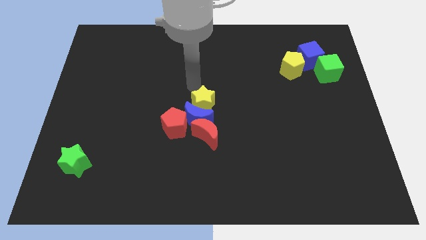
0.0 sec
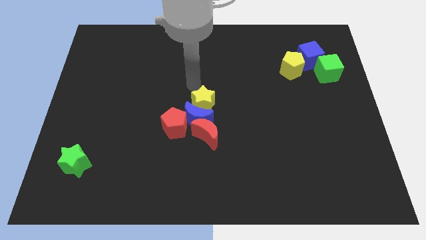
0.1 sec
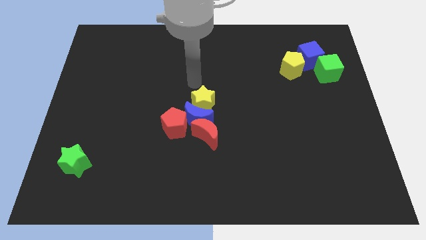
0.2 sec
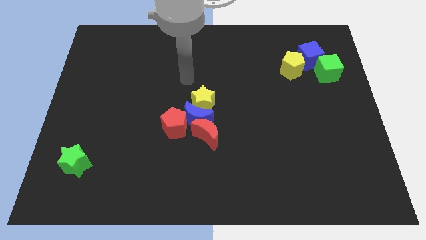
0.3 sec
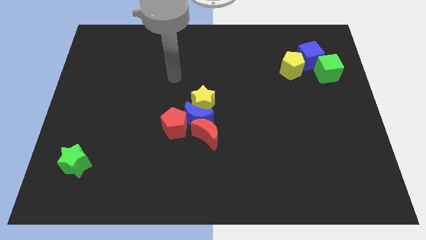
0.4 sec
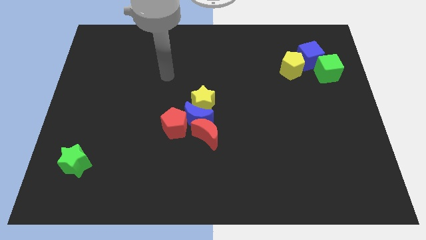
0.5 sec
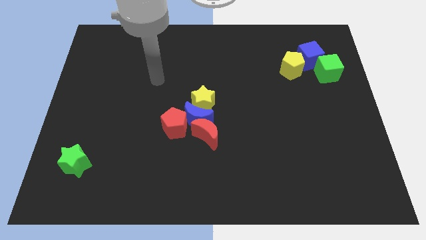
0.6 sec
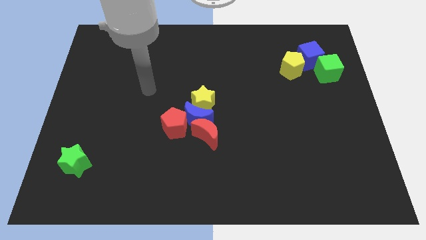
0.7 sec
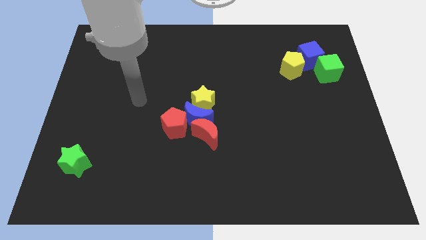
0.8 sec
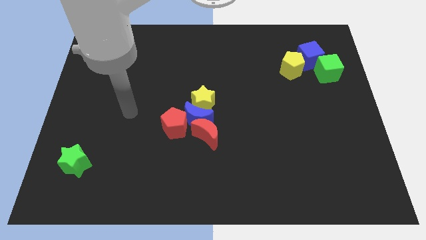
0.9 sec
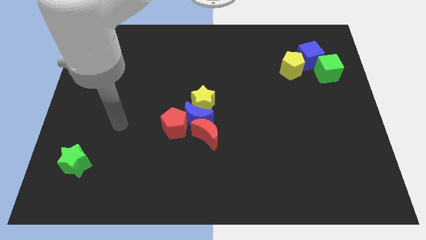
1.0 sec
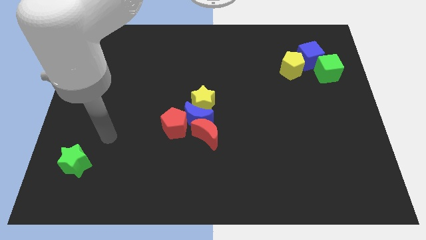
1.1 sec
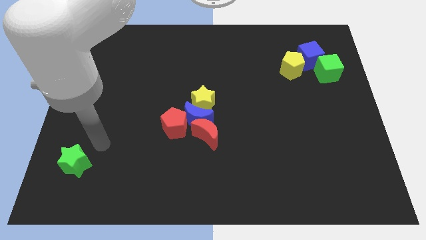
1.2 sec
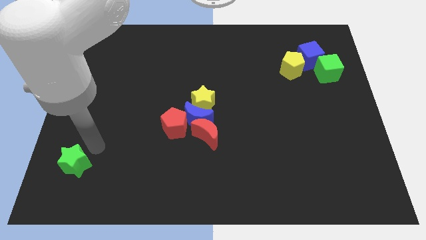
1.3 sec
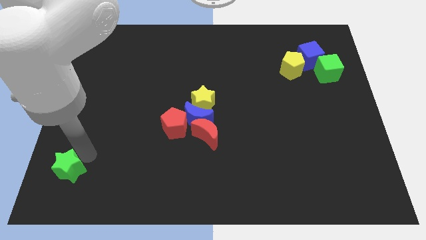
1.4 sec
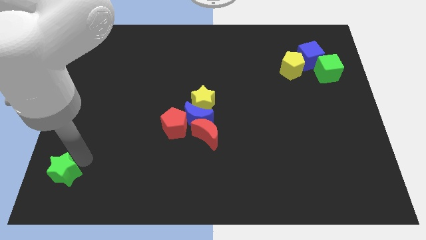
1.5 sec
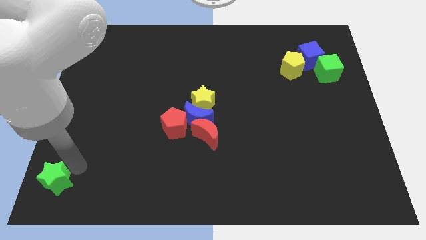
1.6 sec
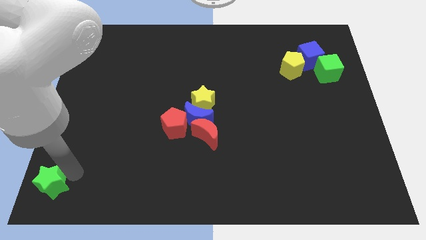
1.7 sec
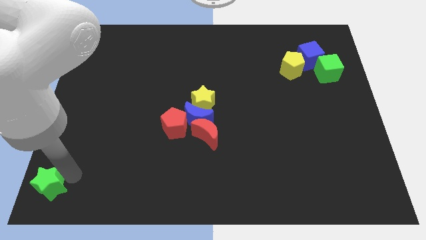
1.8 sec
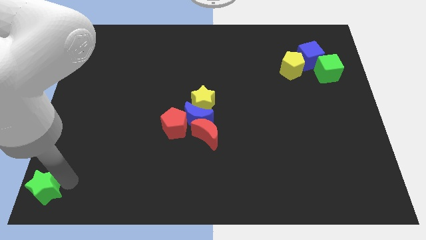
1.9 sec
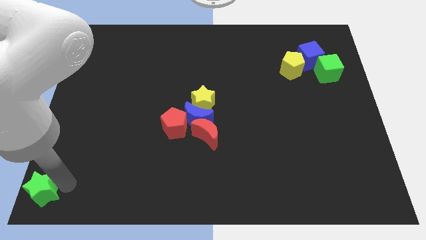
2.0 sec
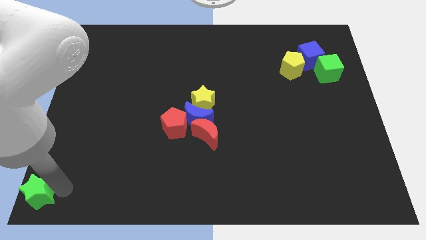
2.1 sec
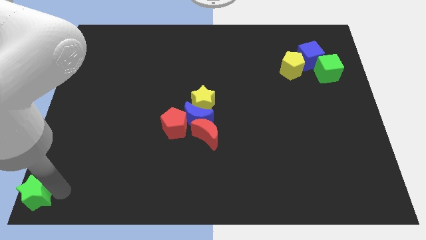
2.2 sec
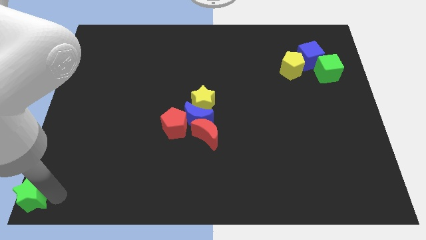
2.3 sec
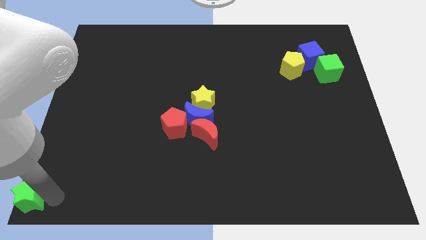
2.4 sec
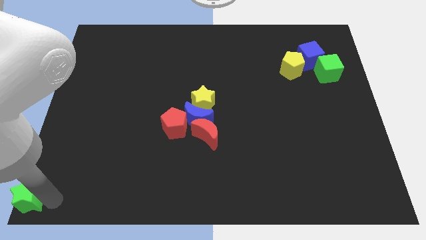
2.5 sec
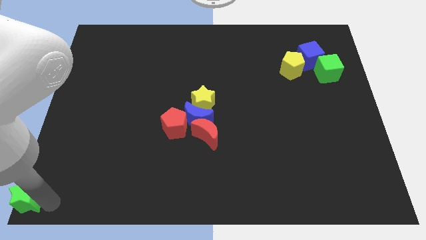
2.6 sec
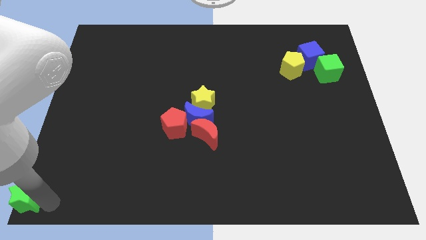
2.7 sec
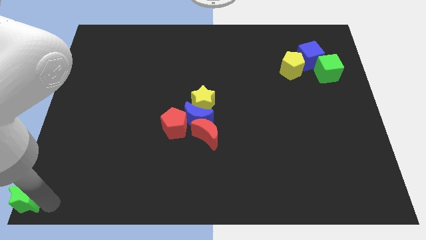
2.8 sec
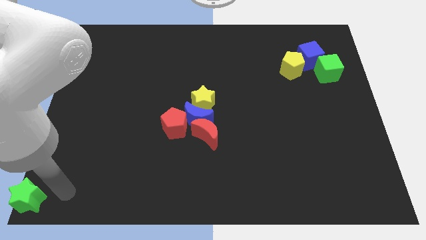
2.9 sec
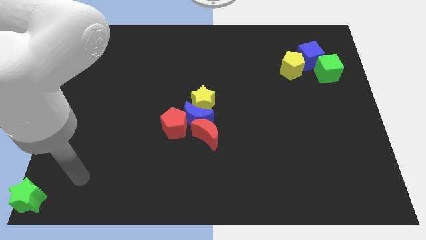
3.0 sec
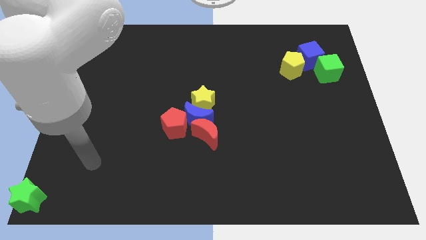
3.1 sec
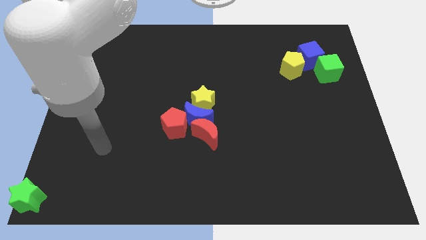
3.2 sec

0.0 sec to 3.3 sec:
place the green star at bottom left side of the board

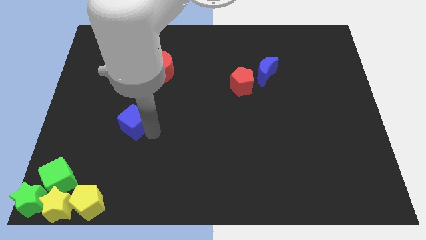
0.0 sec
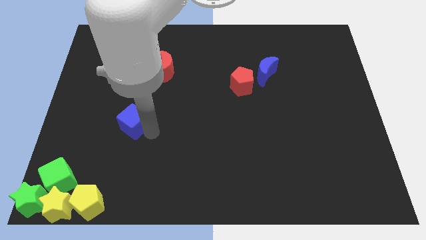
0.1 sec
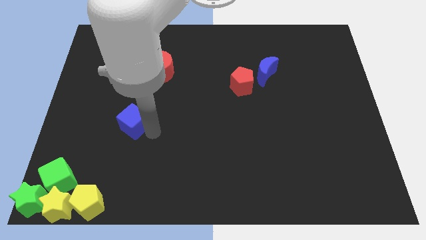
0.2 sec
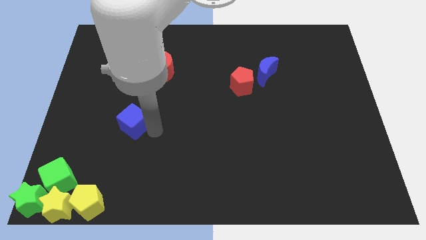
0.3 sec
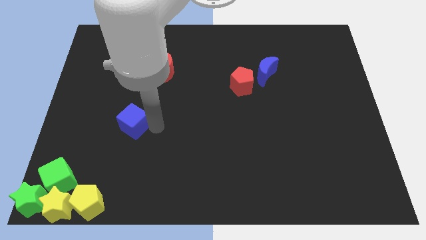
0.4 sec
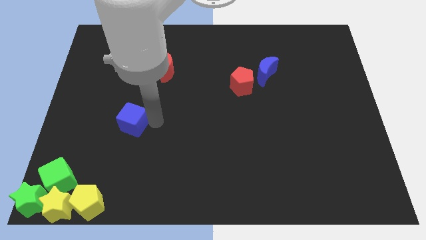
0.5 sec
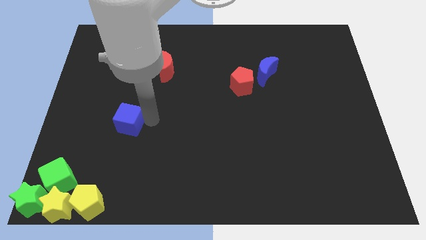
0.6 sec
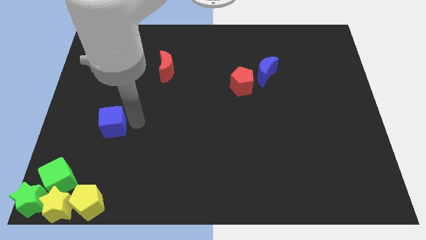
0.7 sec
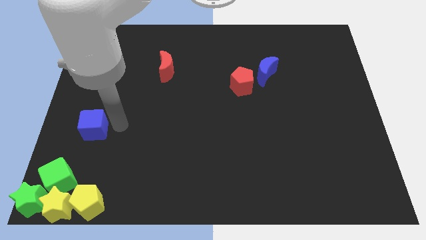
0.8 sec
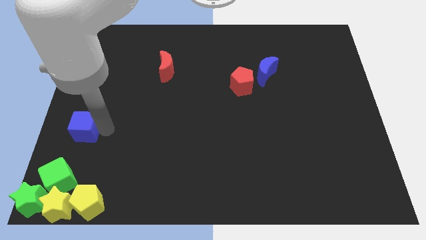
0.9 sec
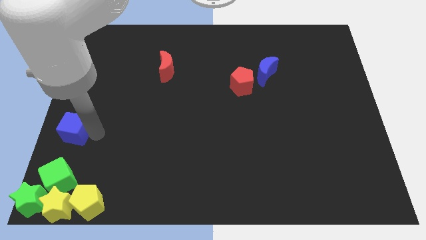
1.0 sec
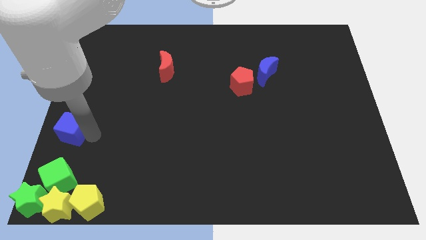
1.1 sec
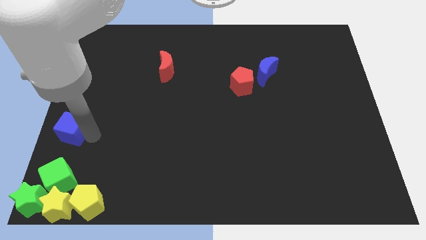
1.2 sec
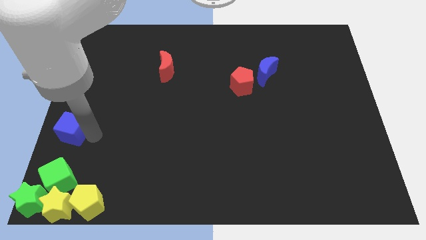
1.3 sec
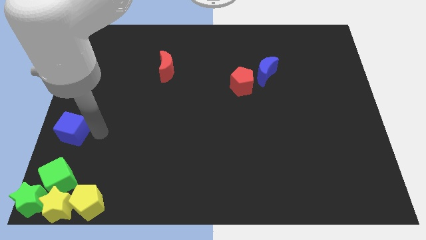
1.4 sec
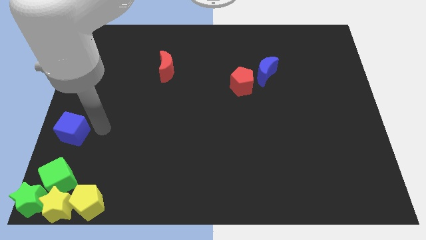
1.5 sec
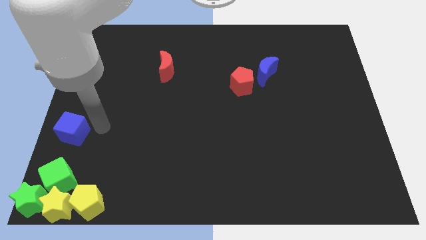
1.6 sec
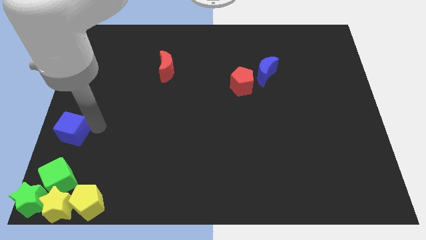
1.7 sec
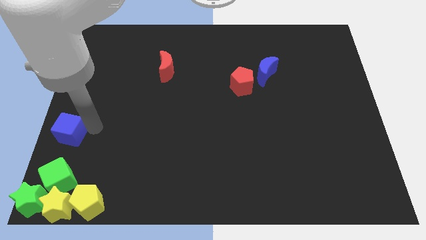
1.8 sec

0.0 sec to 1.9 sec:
place blue cube to the top of green cube

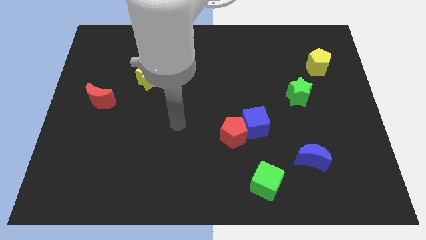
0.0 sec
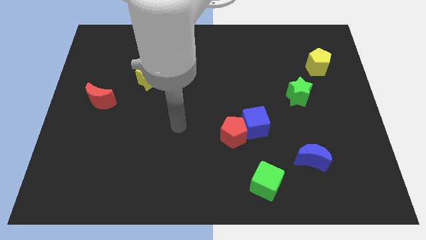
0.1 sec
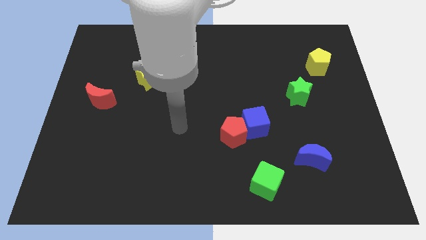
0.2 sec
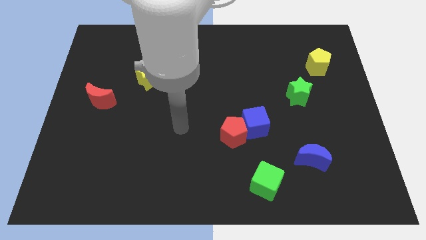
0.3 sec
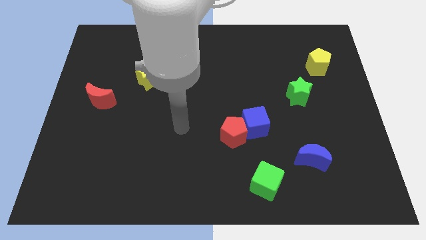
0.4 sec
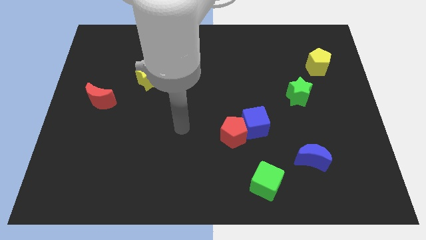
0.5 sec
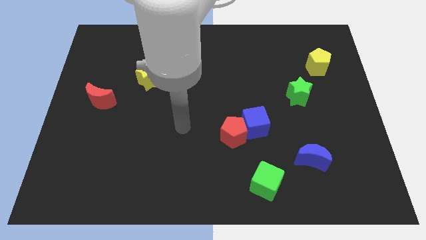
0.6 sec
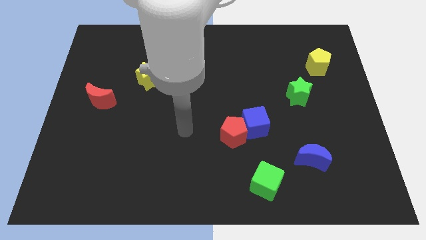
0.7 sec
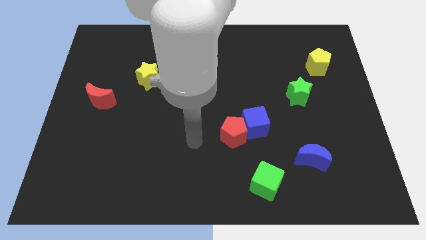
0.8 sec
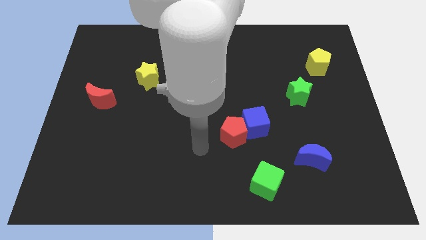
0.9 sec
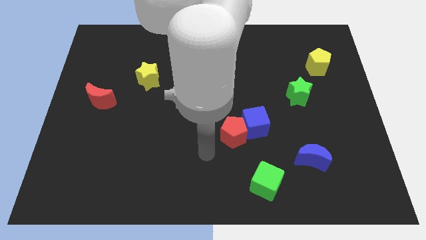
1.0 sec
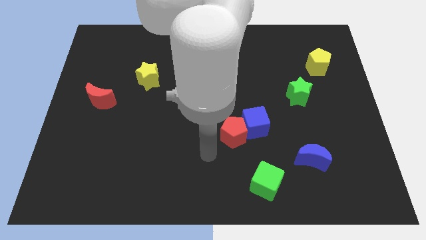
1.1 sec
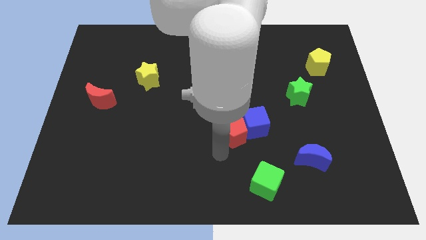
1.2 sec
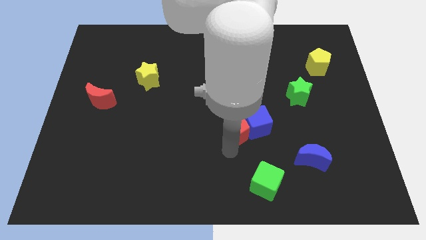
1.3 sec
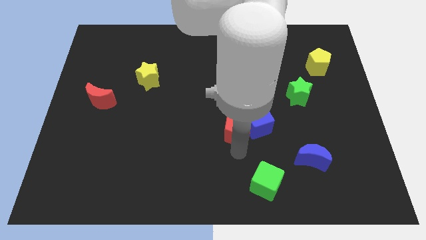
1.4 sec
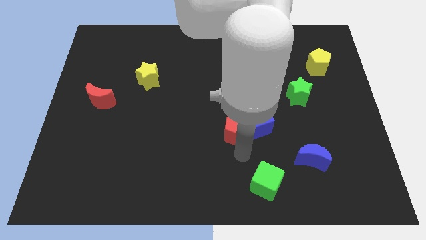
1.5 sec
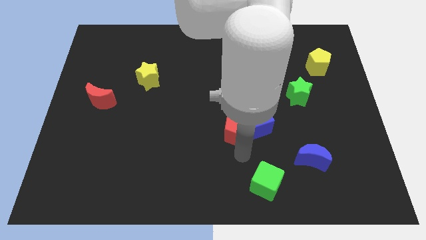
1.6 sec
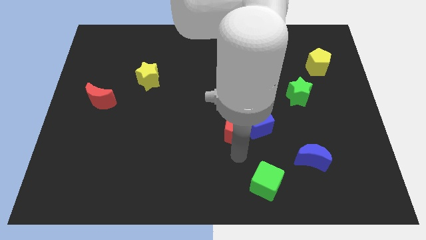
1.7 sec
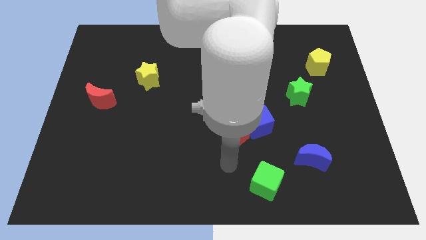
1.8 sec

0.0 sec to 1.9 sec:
move the arm to the bottom of red pentagon

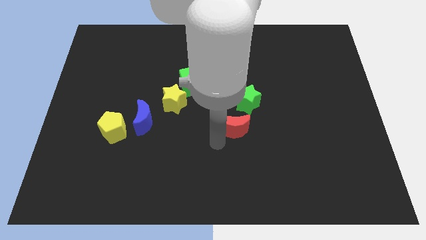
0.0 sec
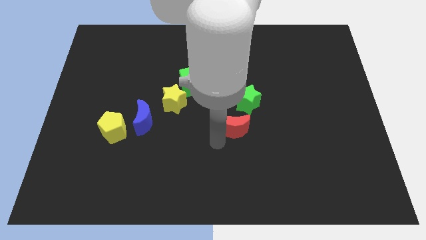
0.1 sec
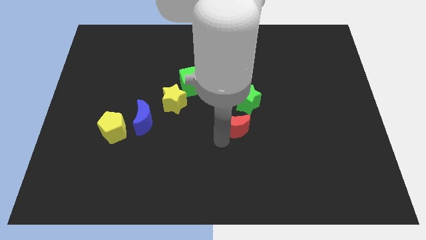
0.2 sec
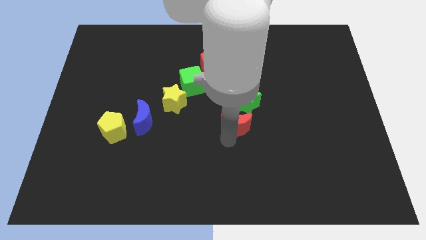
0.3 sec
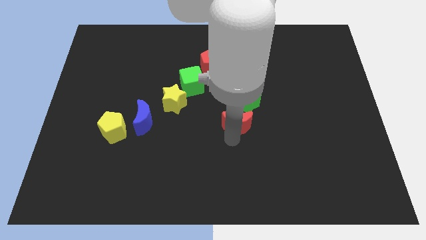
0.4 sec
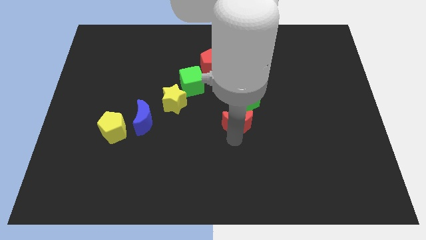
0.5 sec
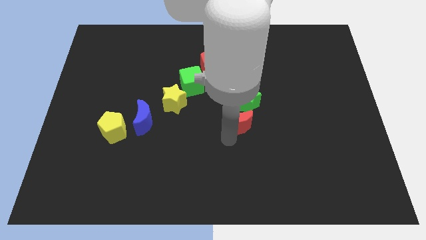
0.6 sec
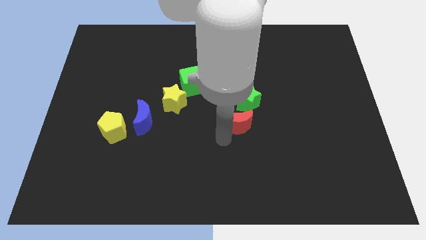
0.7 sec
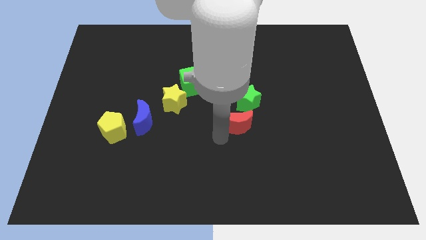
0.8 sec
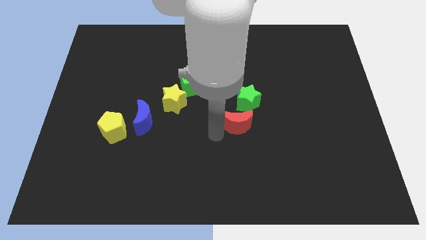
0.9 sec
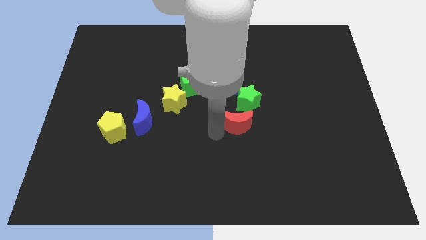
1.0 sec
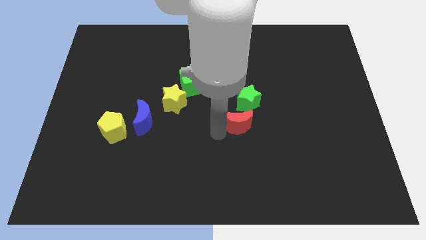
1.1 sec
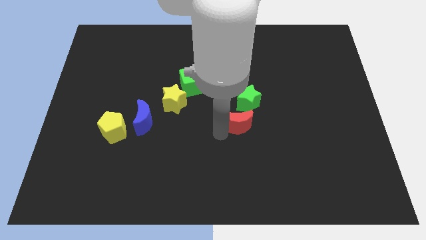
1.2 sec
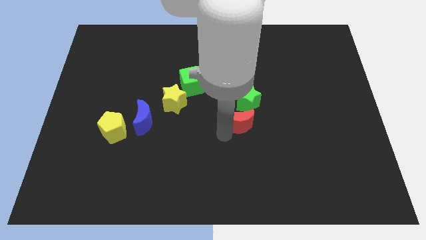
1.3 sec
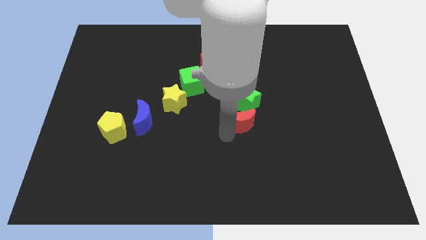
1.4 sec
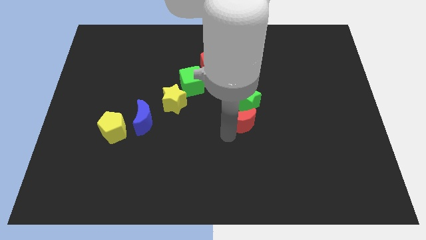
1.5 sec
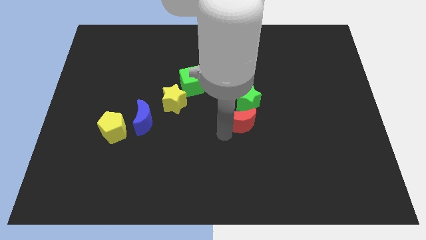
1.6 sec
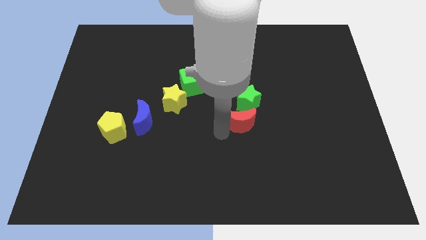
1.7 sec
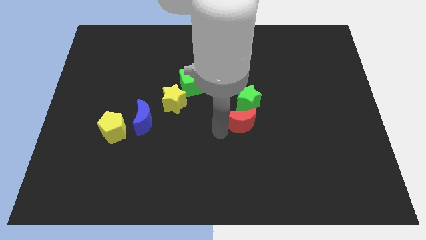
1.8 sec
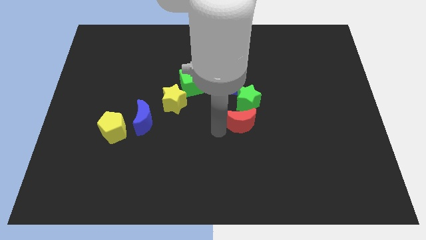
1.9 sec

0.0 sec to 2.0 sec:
push the red moon towards the green star
